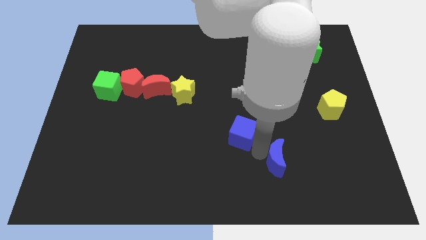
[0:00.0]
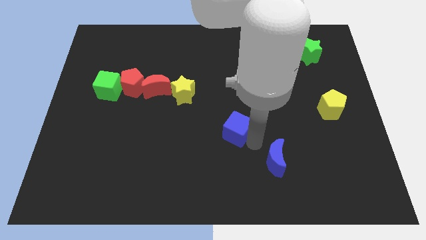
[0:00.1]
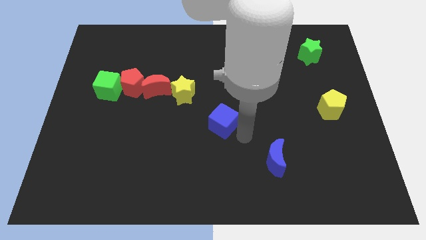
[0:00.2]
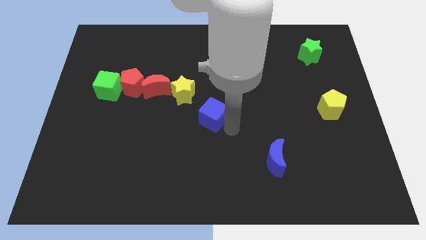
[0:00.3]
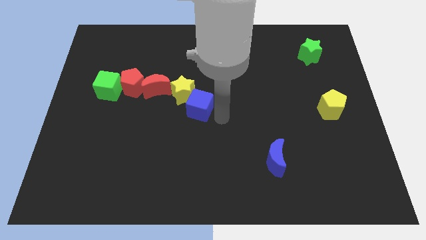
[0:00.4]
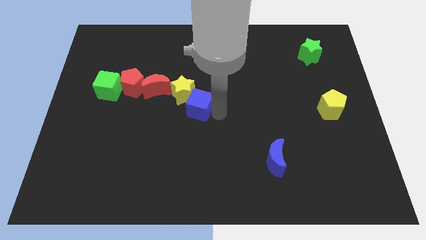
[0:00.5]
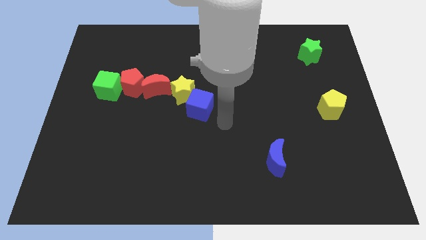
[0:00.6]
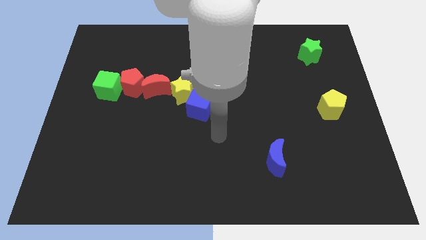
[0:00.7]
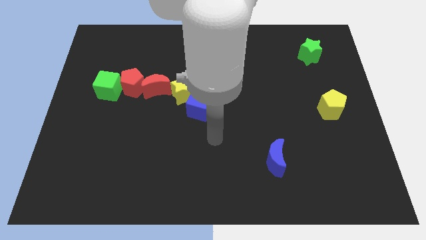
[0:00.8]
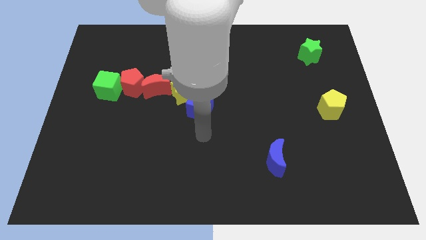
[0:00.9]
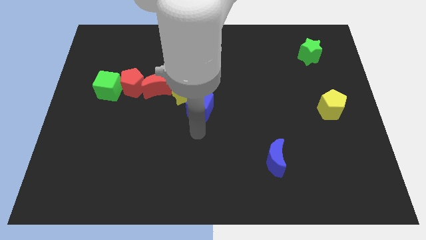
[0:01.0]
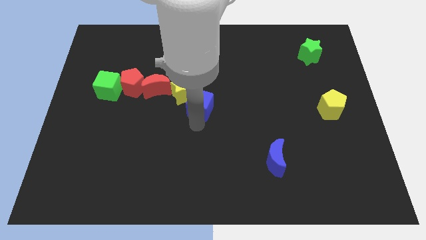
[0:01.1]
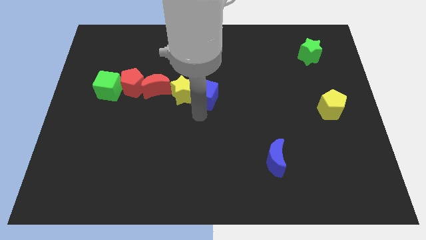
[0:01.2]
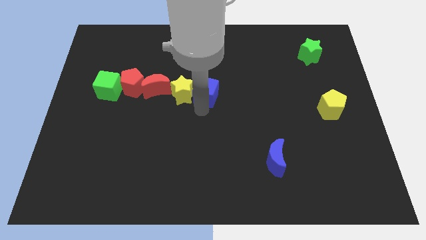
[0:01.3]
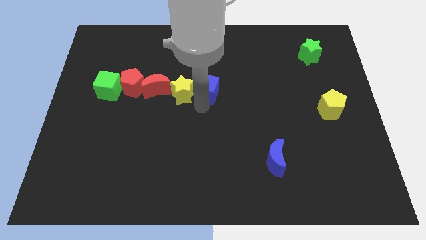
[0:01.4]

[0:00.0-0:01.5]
place the blue cube right to the yellow star

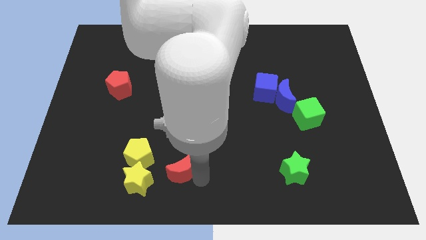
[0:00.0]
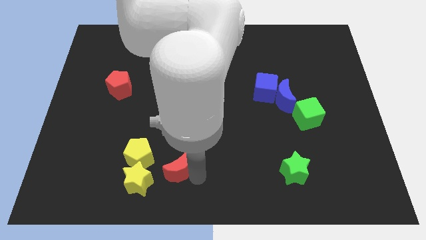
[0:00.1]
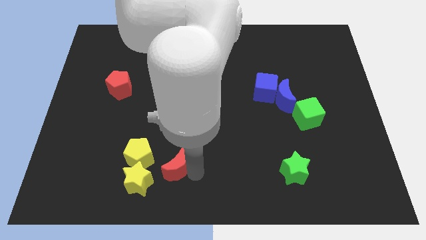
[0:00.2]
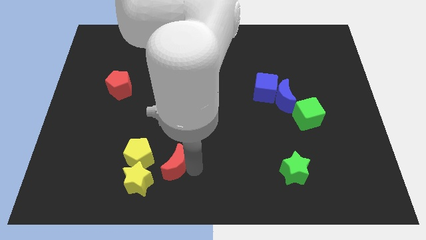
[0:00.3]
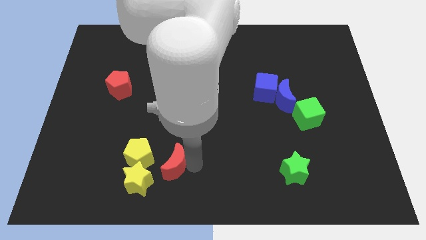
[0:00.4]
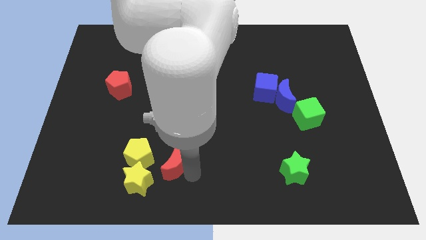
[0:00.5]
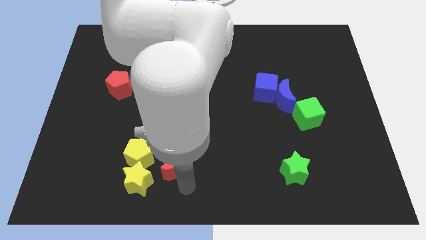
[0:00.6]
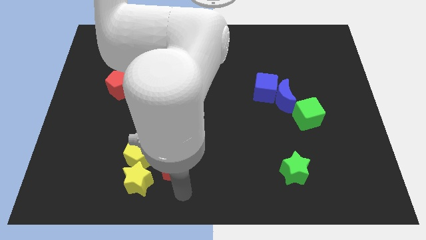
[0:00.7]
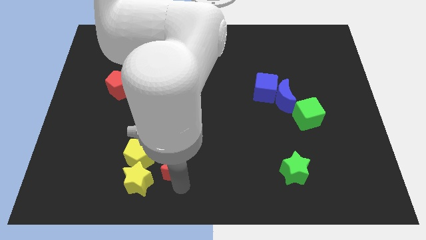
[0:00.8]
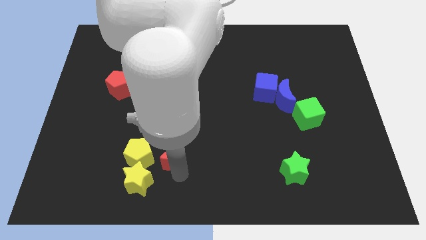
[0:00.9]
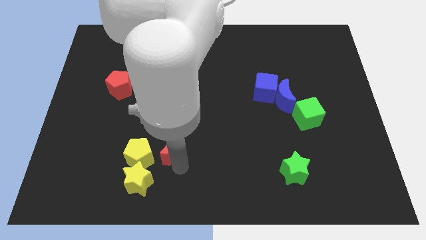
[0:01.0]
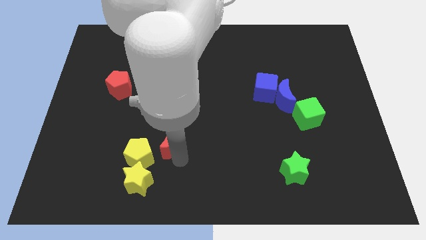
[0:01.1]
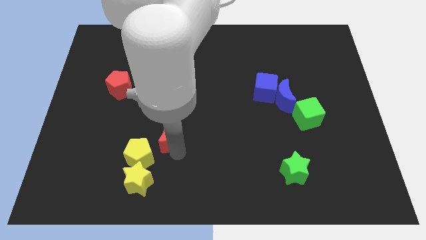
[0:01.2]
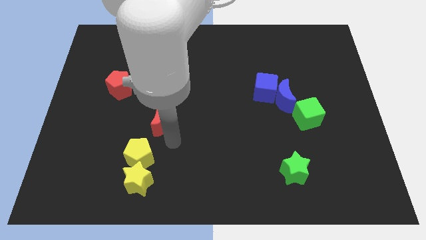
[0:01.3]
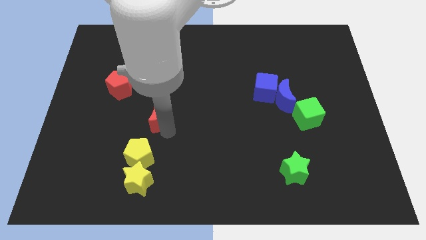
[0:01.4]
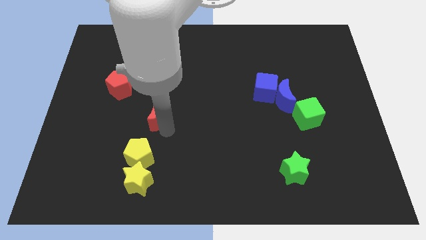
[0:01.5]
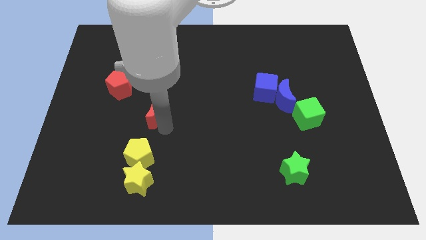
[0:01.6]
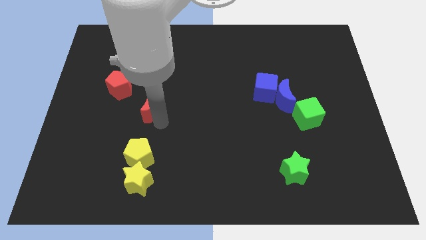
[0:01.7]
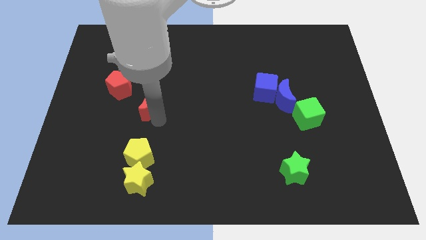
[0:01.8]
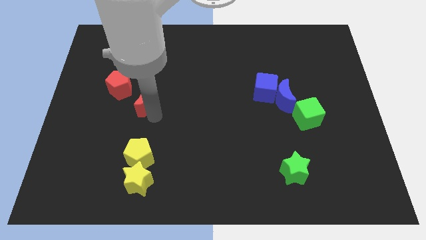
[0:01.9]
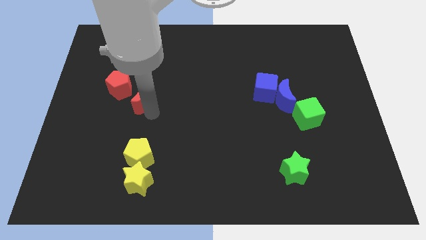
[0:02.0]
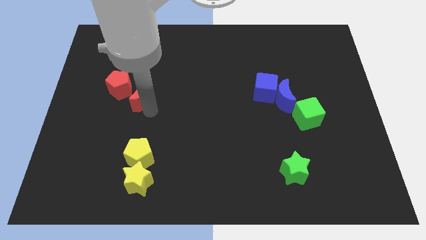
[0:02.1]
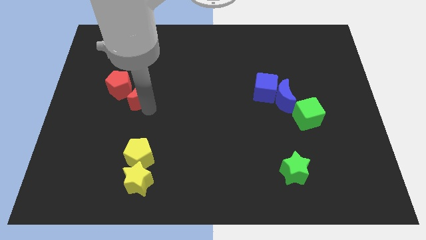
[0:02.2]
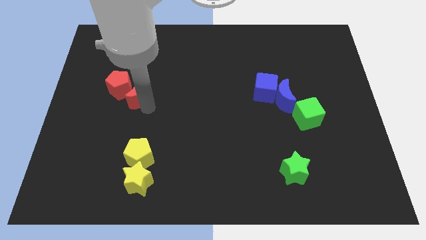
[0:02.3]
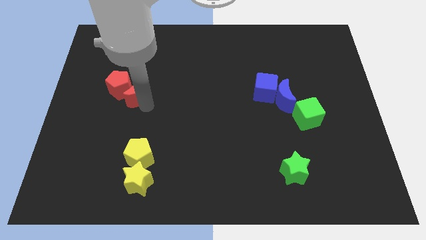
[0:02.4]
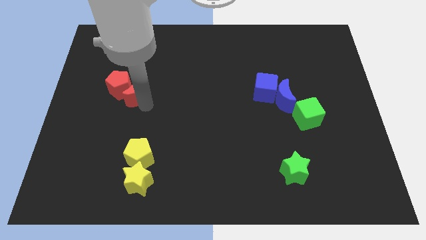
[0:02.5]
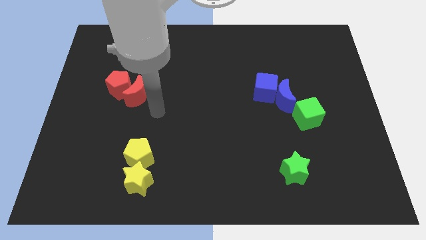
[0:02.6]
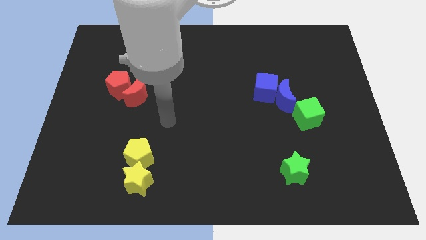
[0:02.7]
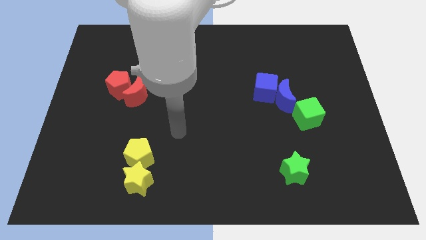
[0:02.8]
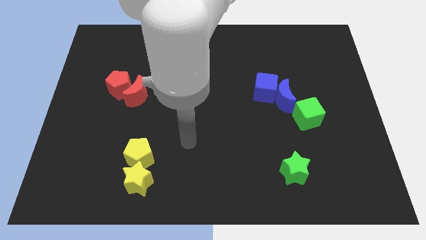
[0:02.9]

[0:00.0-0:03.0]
move red moon near red pentagon

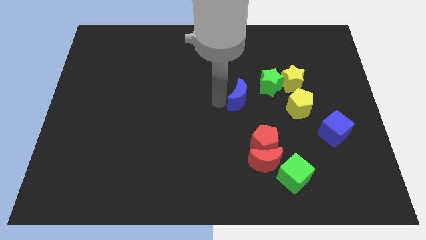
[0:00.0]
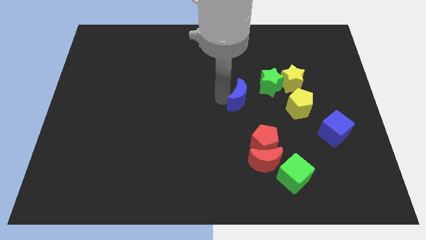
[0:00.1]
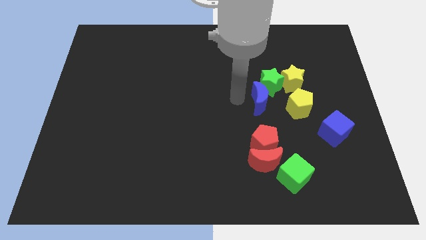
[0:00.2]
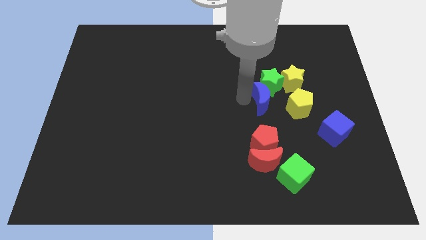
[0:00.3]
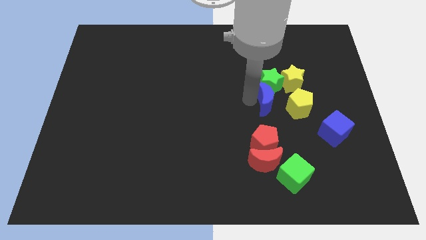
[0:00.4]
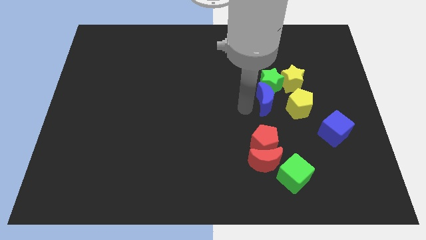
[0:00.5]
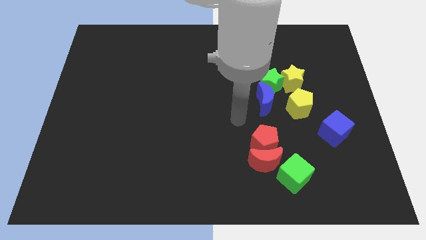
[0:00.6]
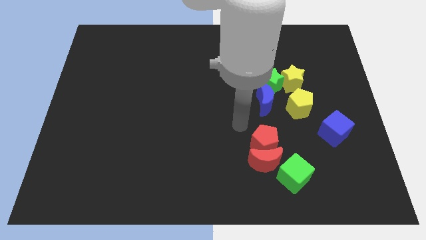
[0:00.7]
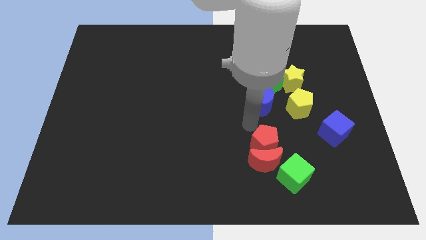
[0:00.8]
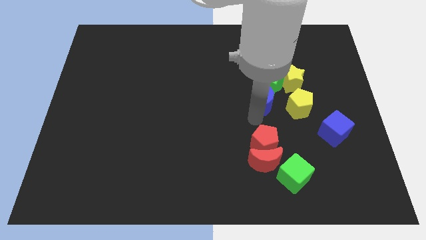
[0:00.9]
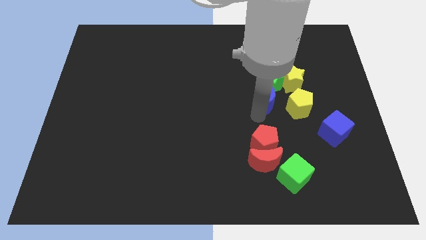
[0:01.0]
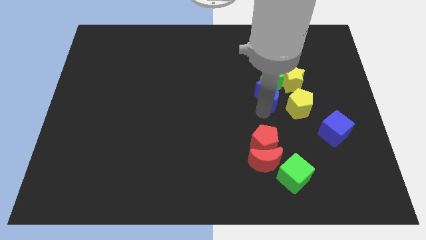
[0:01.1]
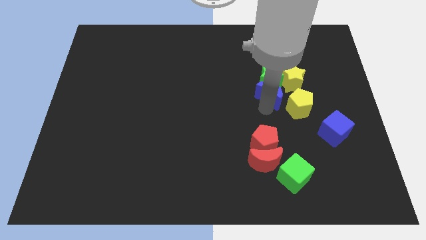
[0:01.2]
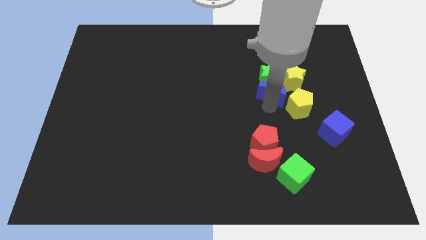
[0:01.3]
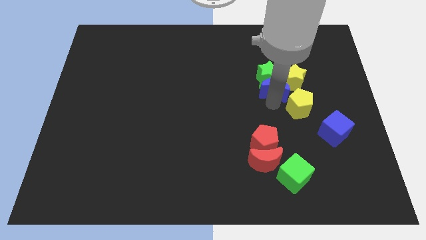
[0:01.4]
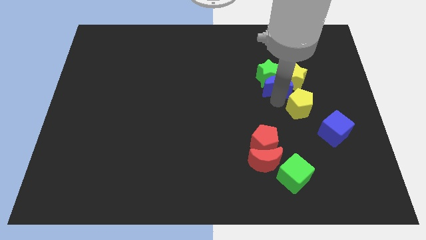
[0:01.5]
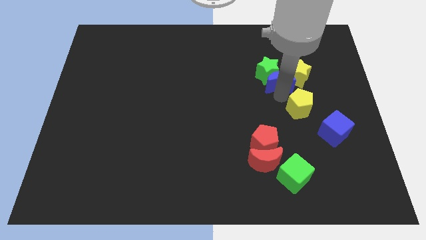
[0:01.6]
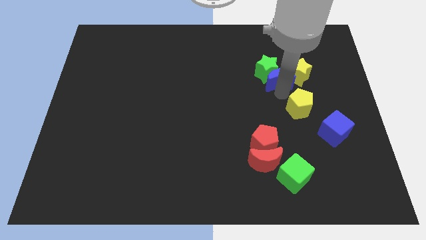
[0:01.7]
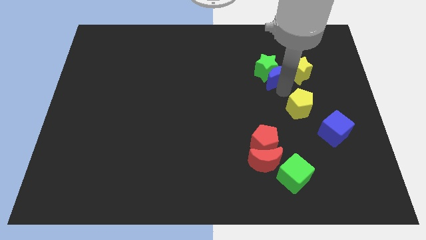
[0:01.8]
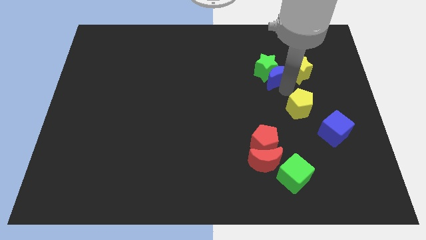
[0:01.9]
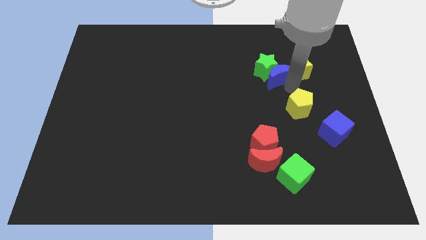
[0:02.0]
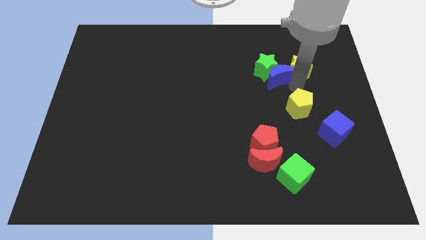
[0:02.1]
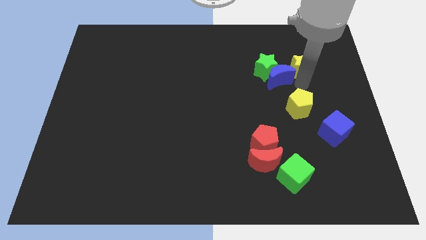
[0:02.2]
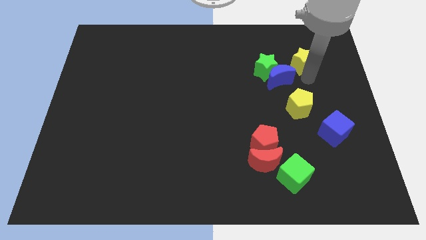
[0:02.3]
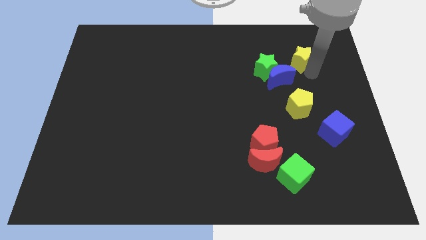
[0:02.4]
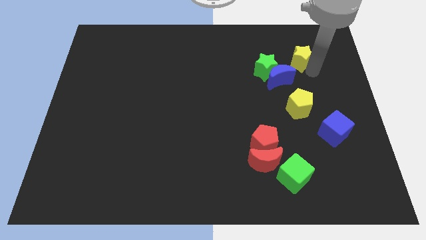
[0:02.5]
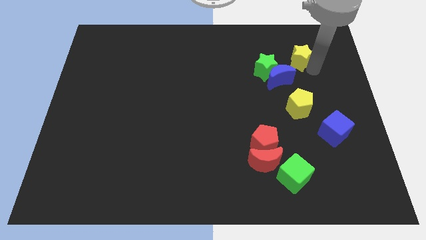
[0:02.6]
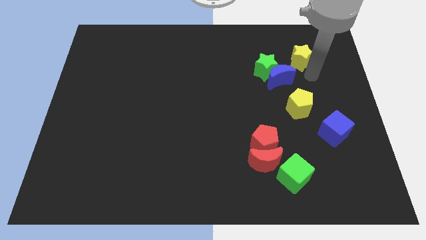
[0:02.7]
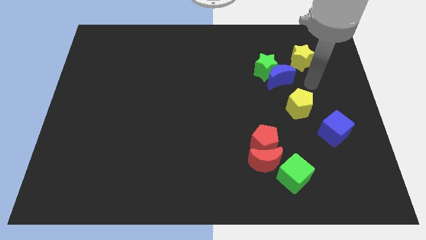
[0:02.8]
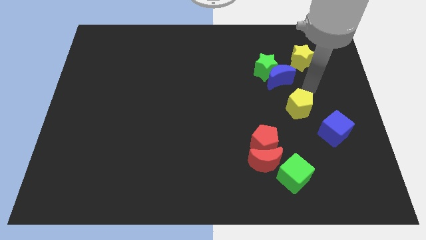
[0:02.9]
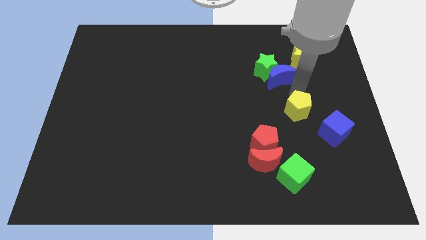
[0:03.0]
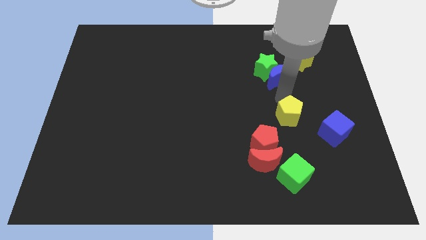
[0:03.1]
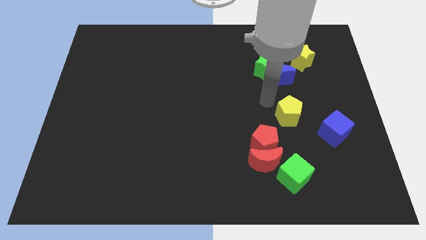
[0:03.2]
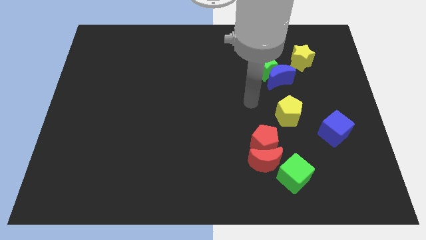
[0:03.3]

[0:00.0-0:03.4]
slightly move down the yellow pentagon

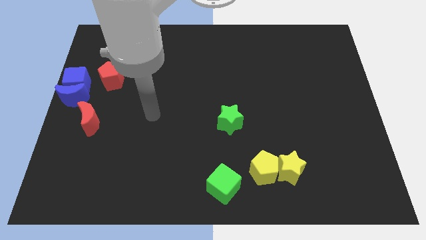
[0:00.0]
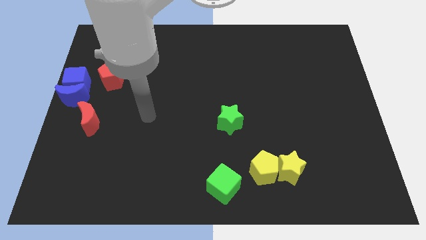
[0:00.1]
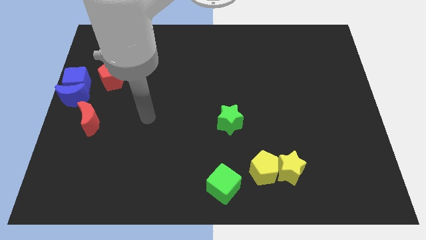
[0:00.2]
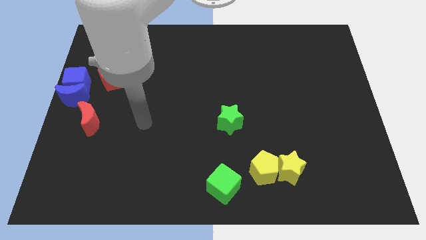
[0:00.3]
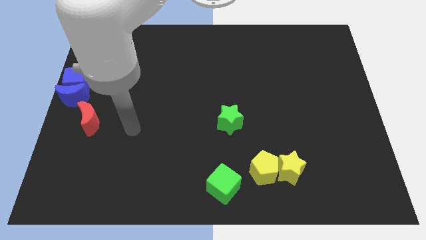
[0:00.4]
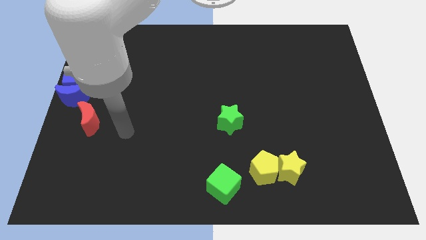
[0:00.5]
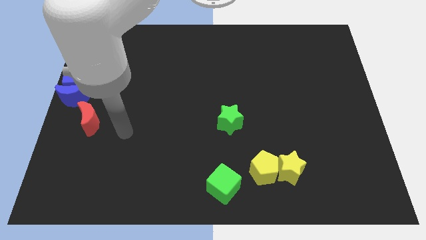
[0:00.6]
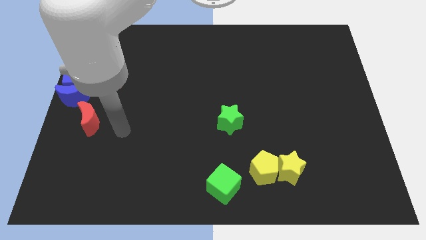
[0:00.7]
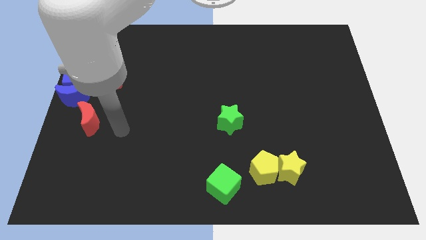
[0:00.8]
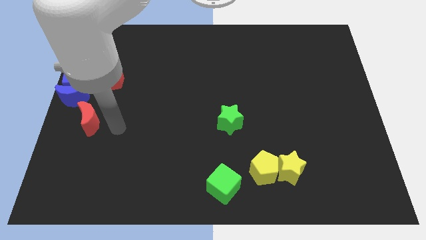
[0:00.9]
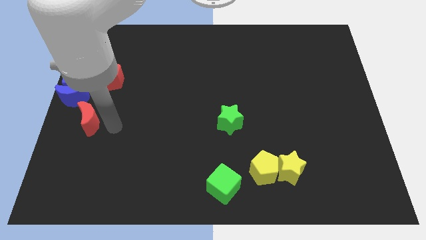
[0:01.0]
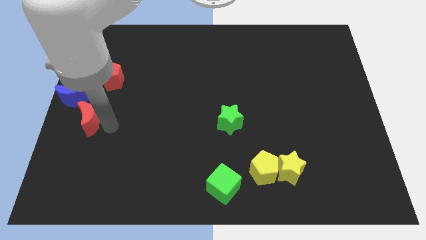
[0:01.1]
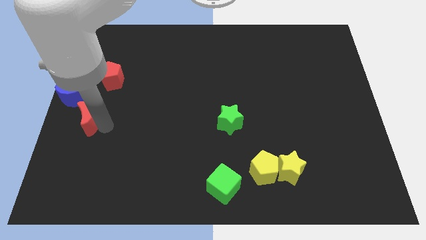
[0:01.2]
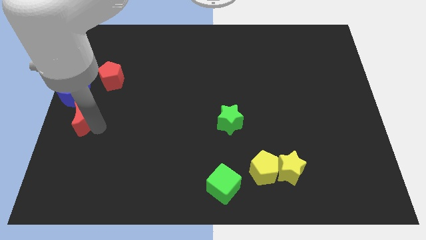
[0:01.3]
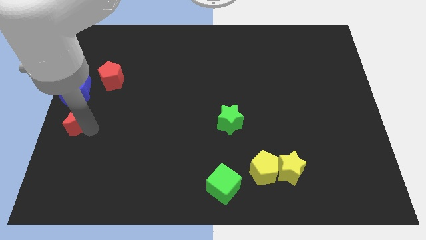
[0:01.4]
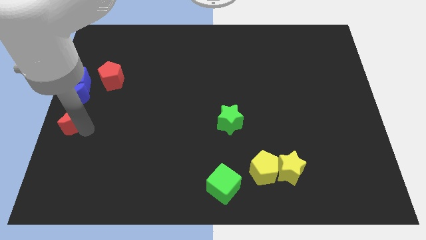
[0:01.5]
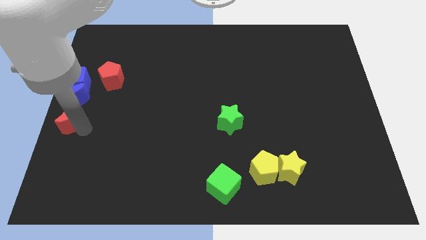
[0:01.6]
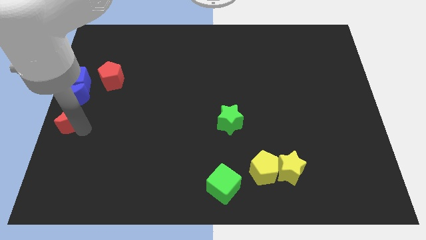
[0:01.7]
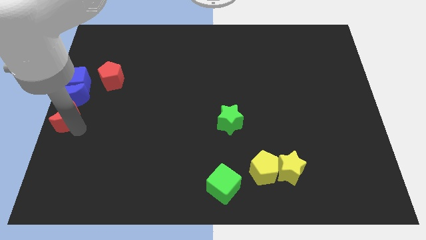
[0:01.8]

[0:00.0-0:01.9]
place the red moon vertically below the blue blocks
